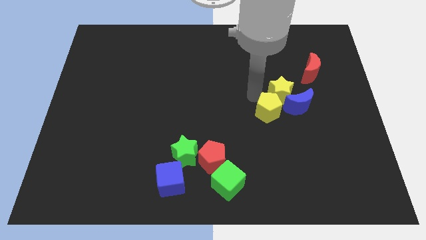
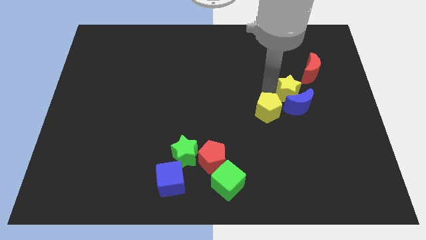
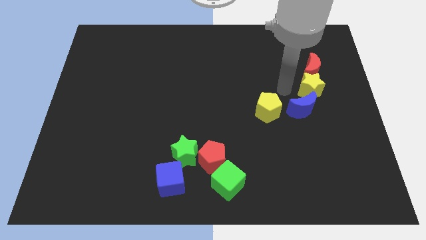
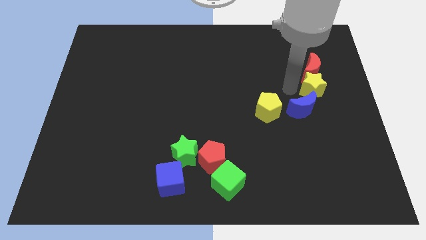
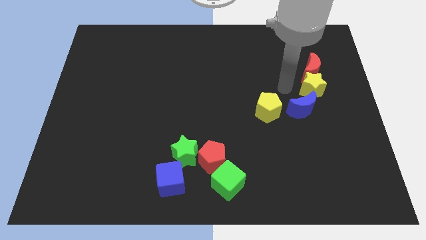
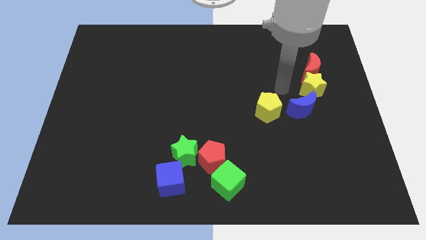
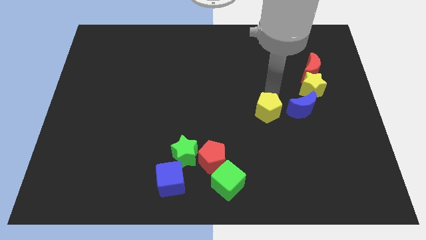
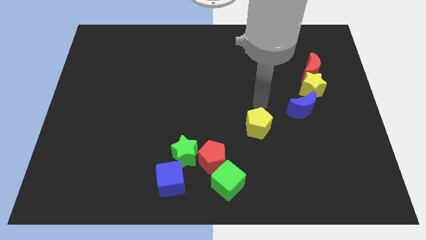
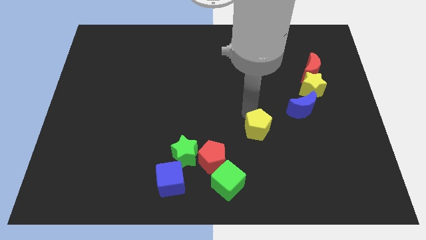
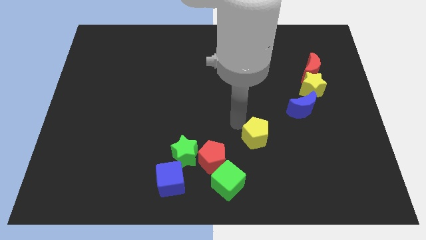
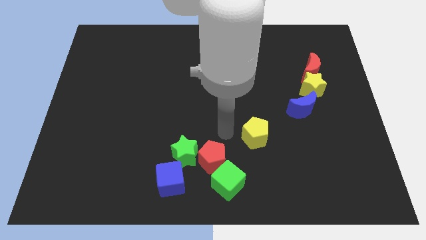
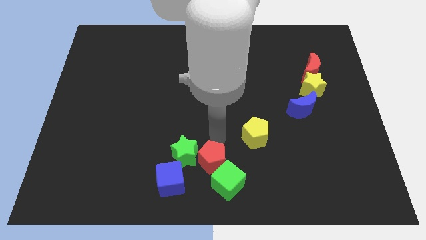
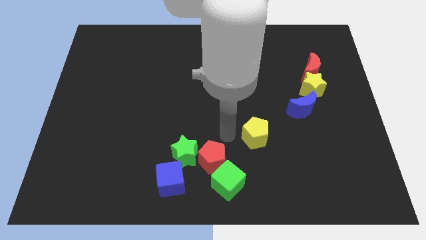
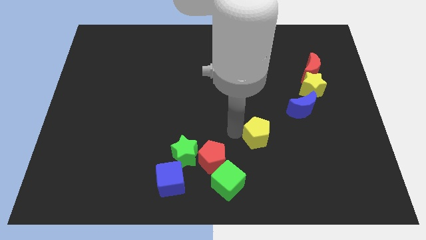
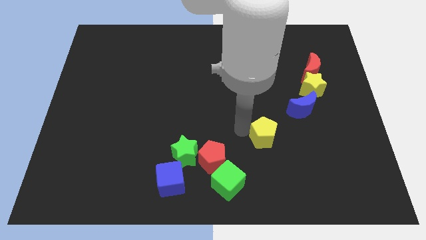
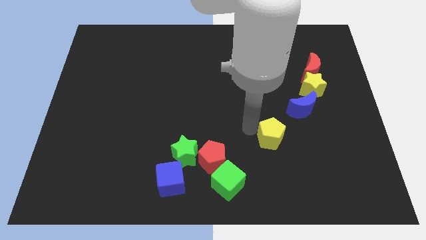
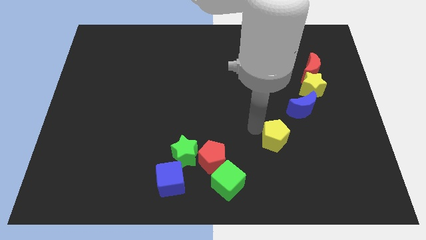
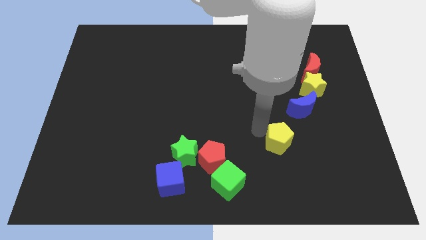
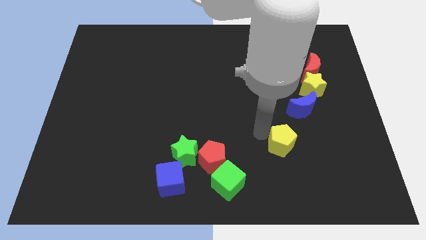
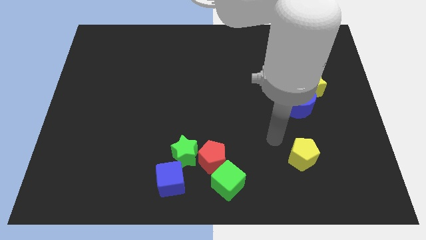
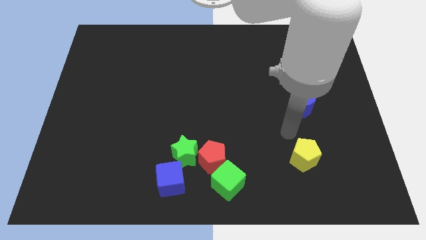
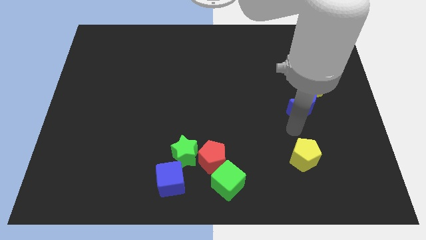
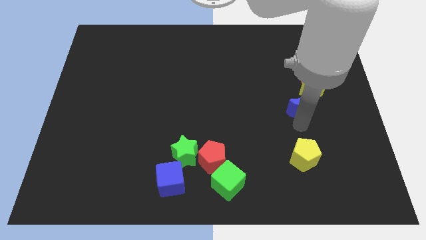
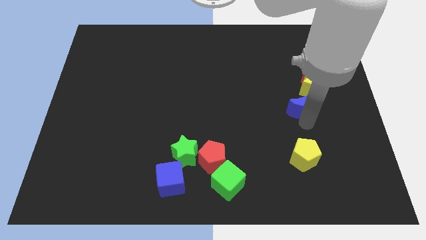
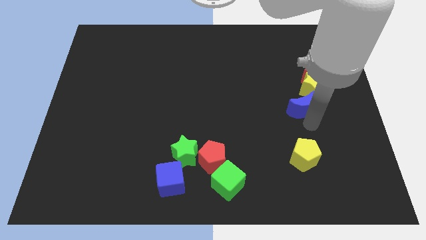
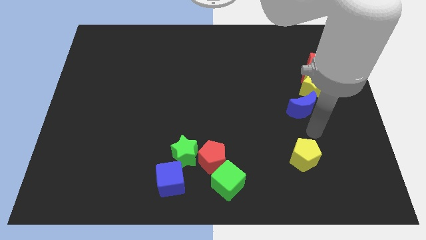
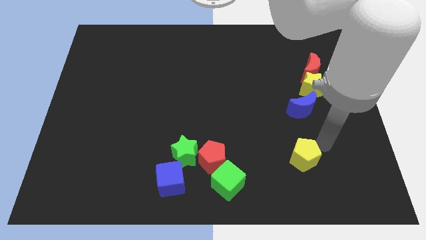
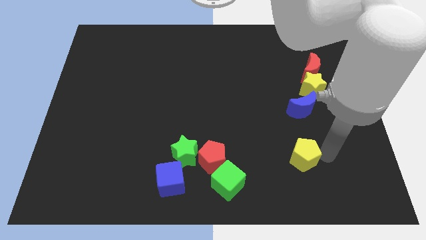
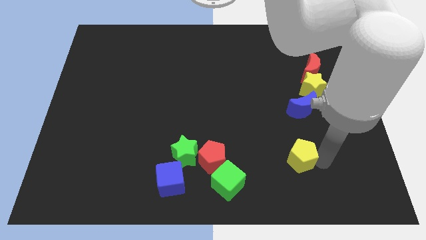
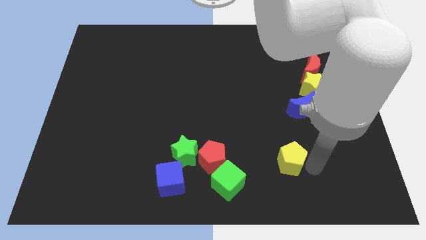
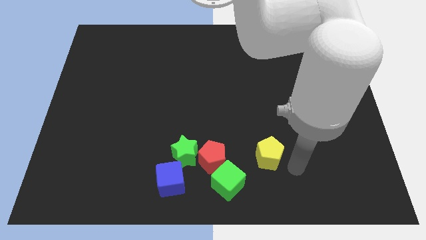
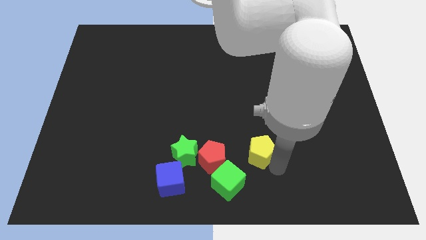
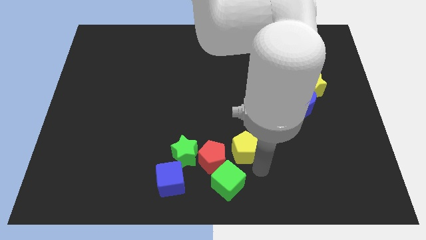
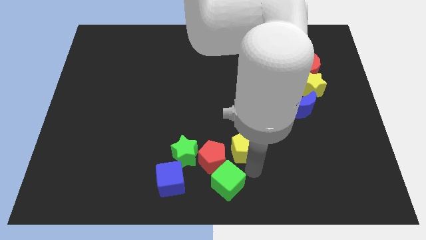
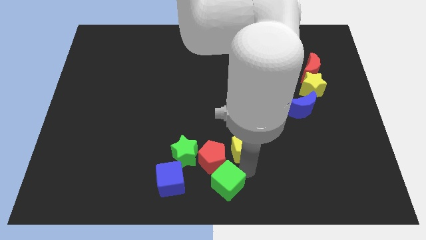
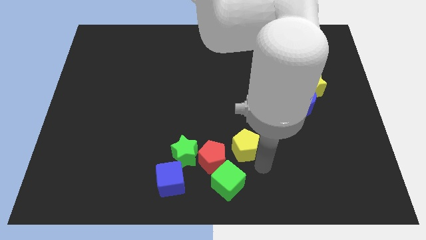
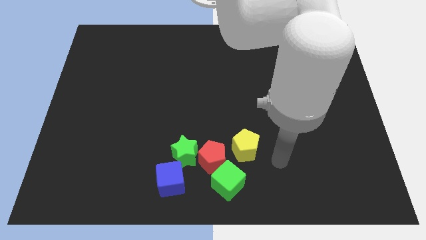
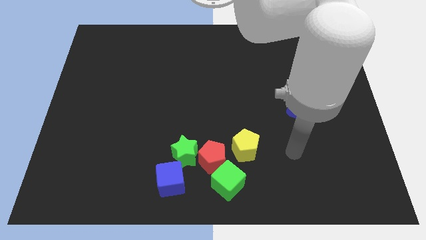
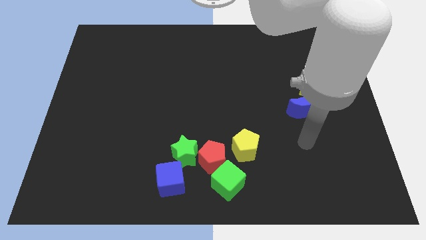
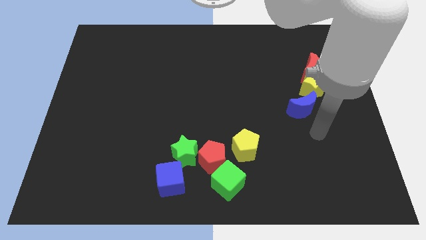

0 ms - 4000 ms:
separate yellow pentagon from yellow star

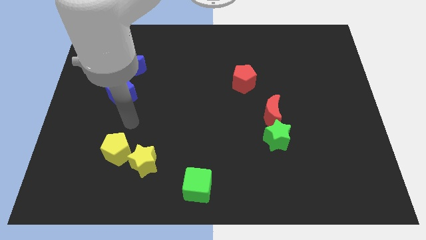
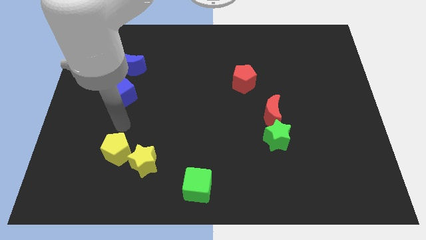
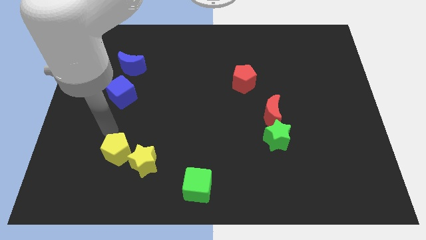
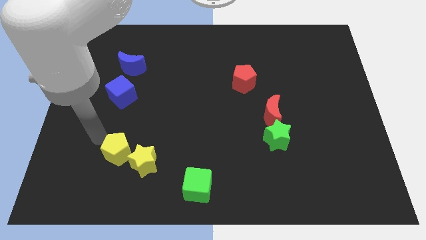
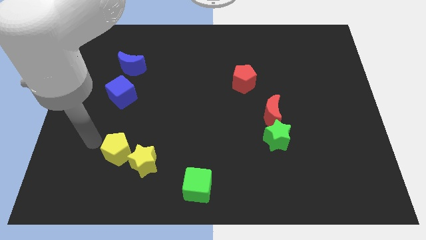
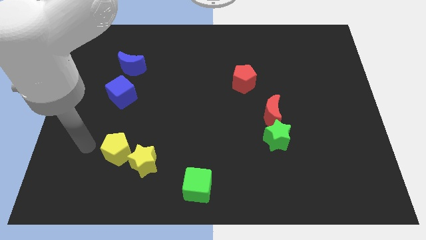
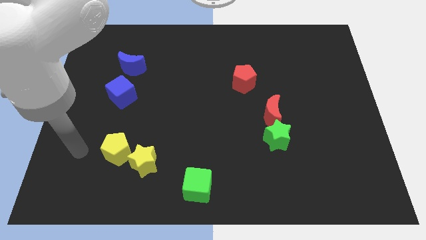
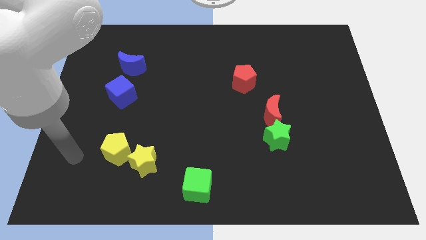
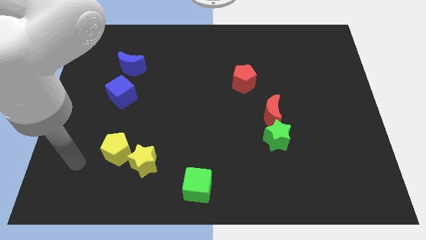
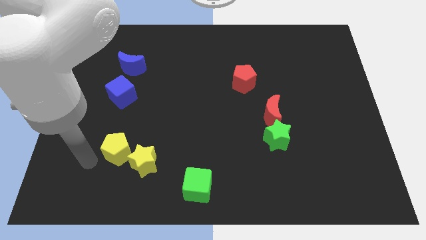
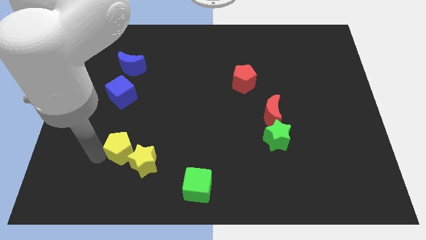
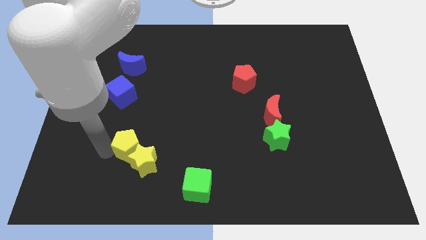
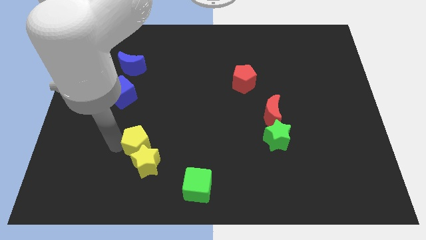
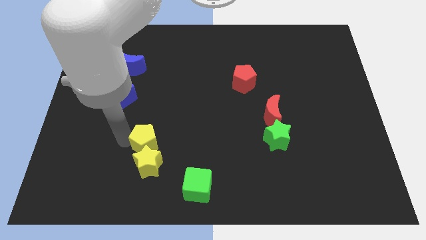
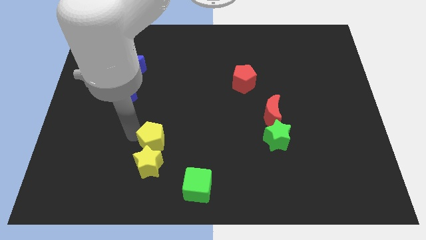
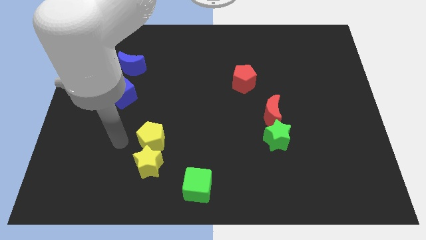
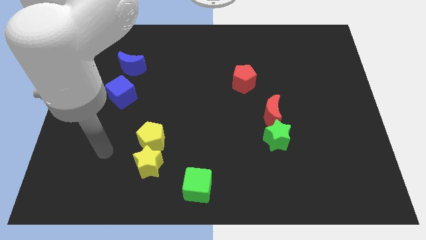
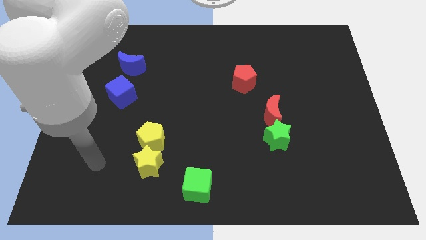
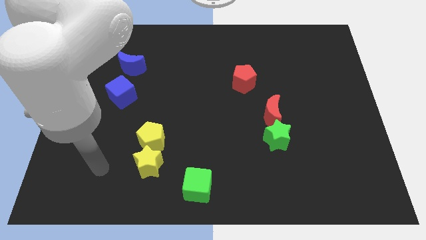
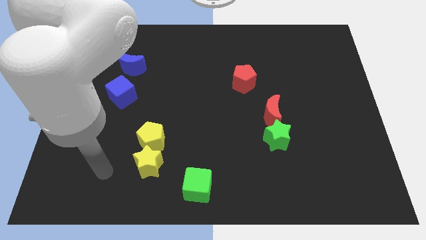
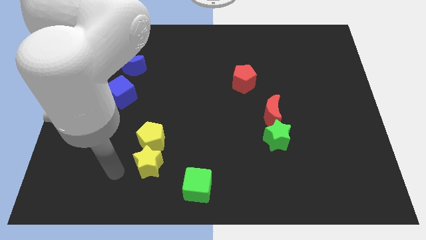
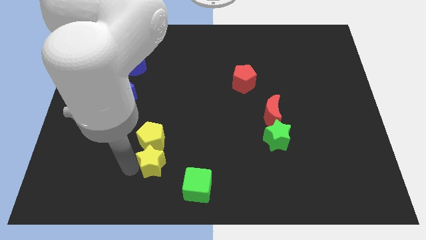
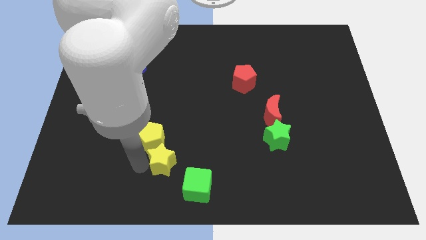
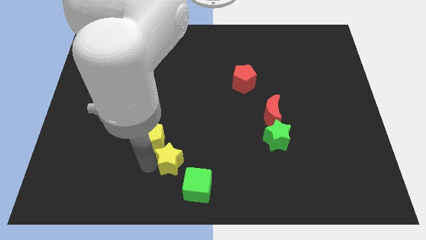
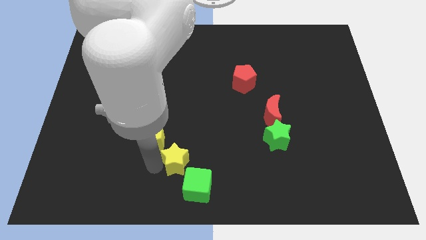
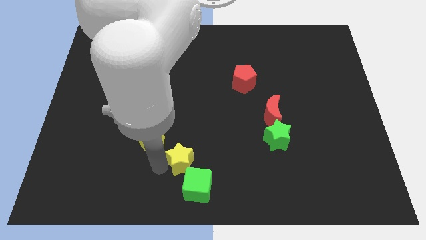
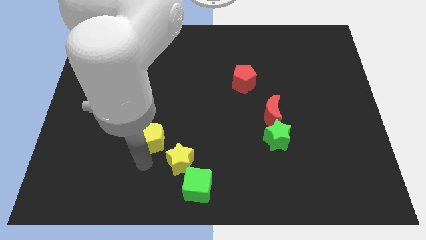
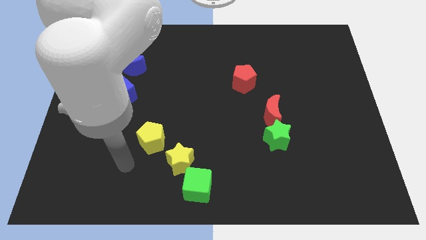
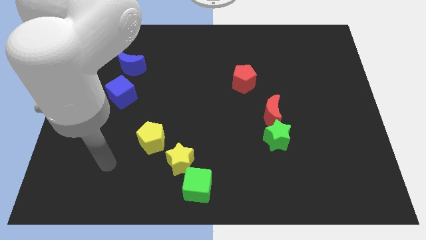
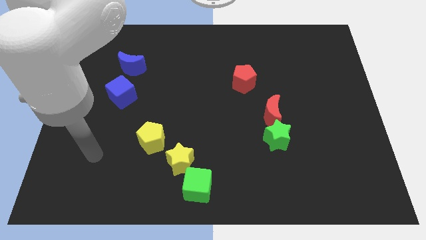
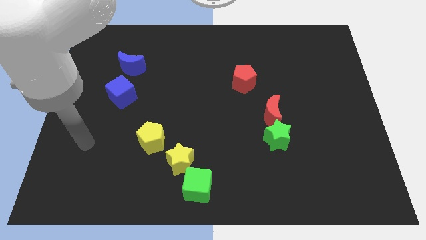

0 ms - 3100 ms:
push yellow star to the top left of green cube

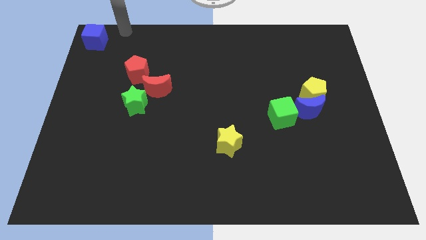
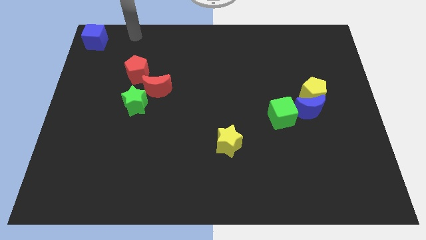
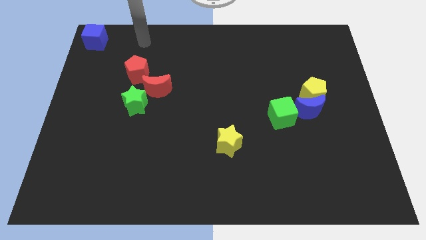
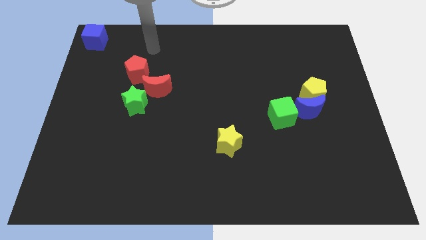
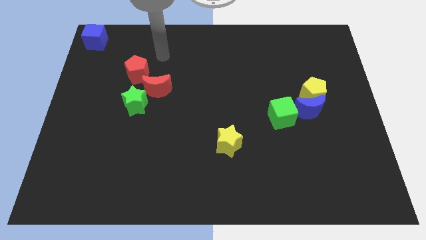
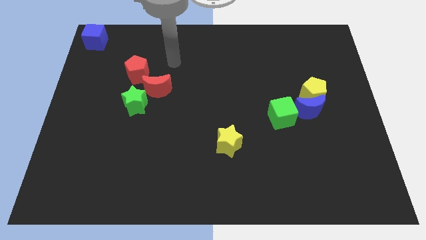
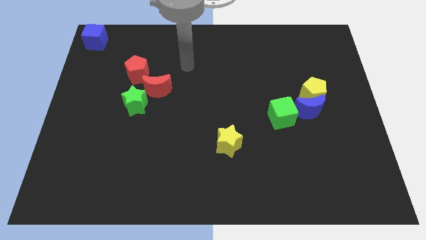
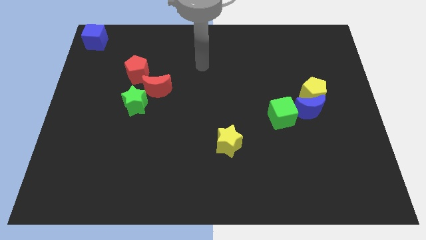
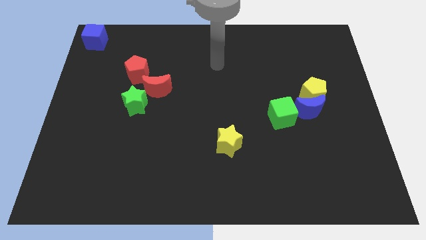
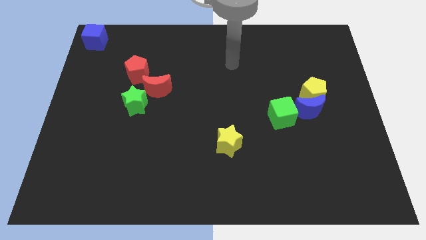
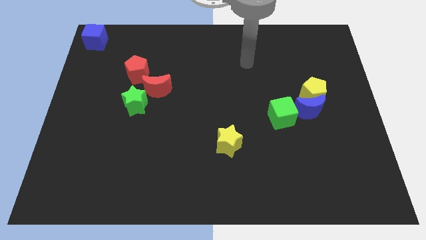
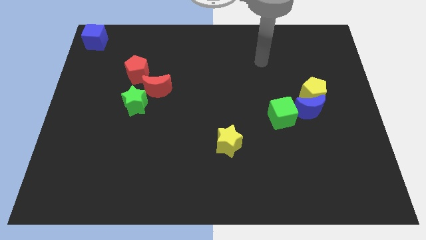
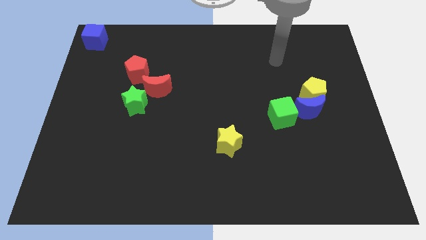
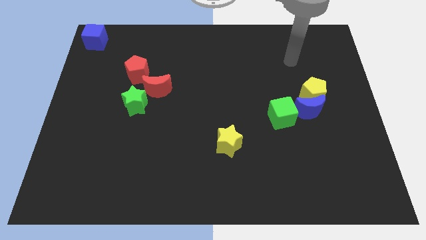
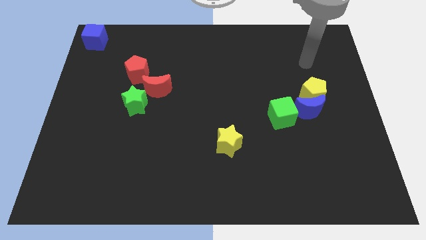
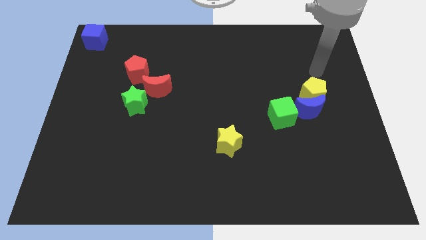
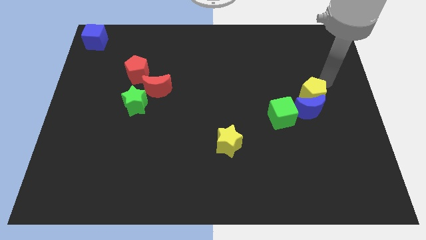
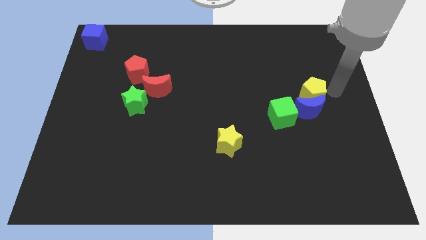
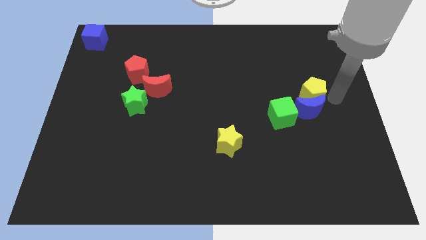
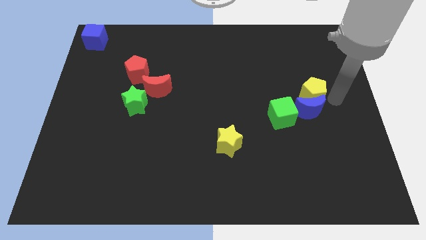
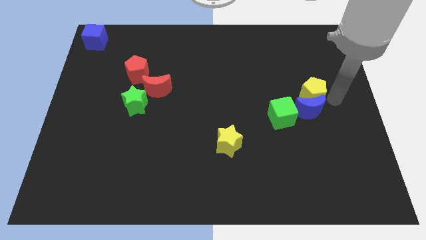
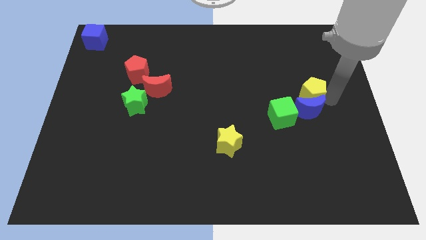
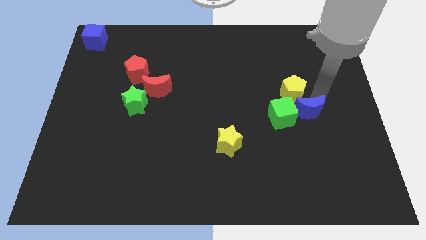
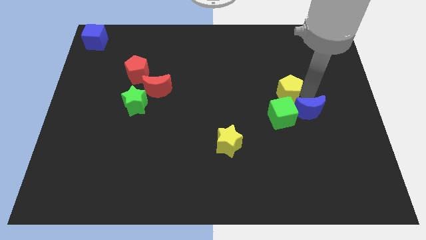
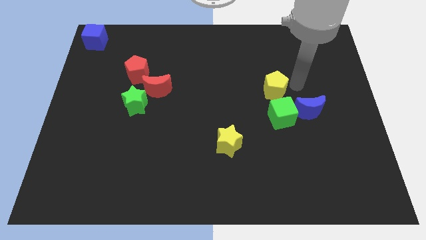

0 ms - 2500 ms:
move the yellow pentagon above the green cube
